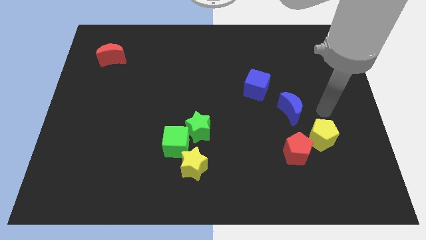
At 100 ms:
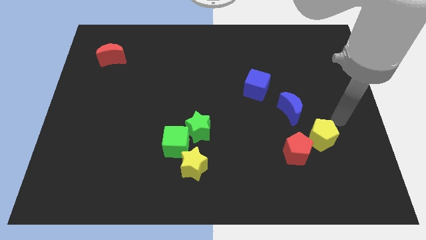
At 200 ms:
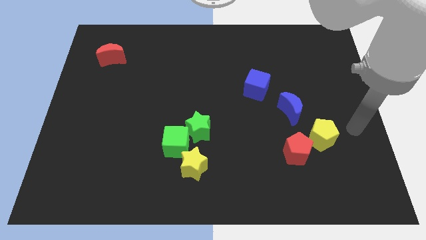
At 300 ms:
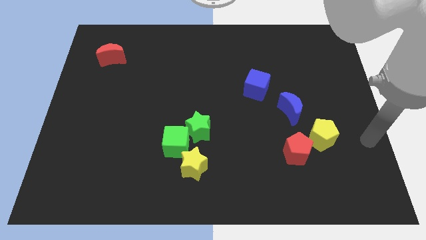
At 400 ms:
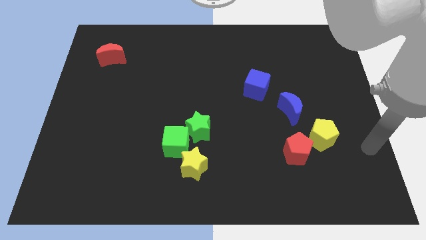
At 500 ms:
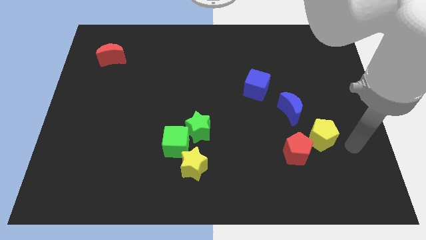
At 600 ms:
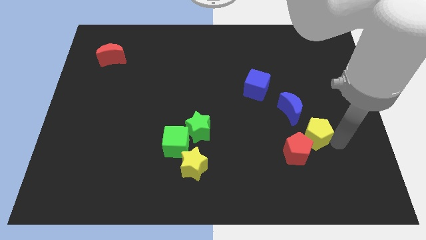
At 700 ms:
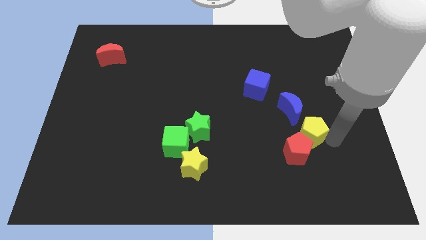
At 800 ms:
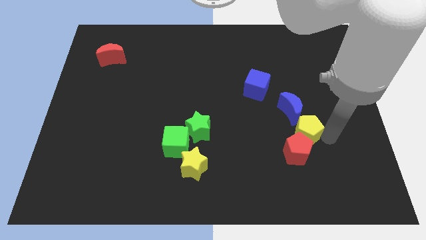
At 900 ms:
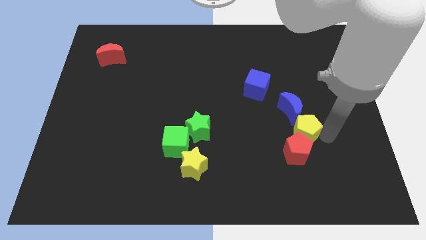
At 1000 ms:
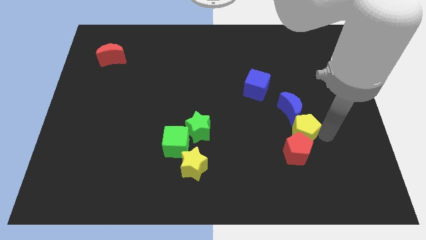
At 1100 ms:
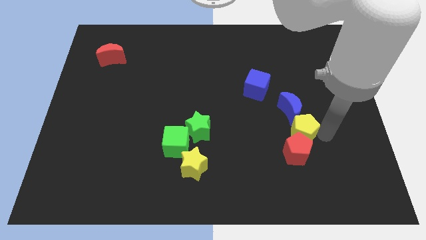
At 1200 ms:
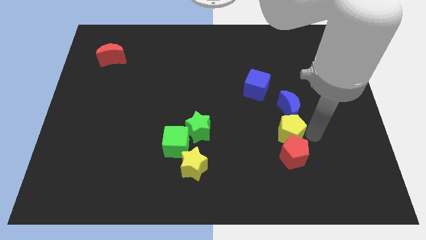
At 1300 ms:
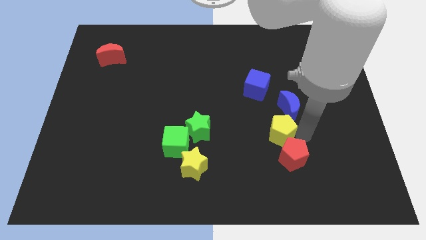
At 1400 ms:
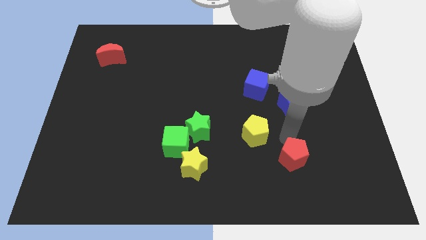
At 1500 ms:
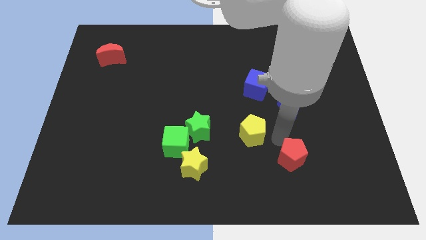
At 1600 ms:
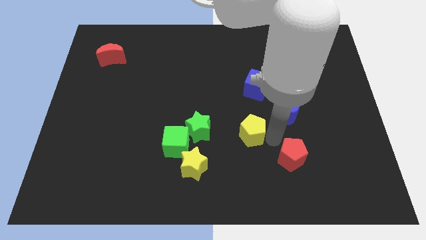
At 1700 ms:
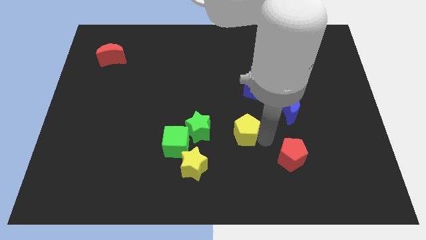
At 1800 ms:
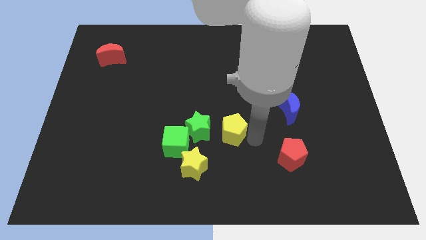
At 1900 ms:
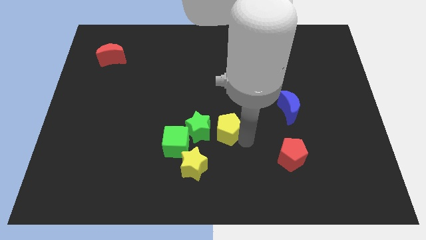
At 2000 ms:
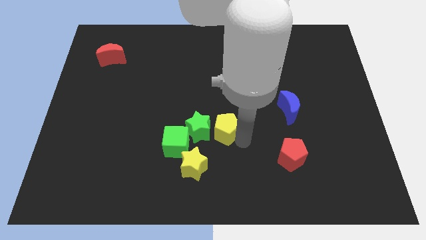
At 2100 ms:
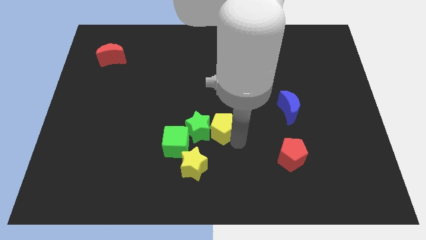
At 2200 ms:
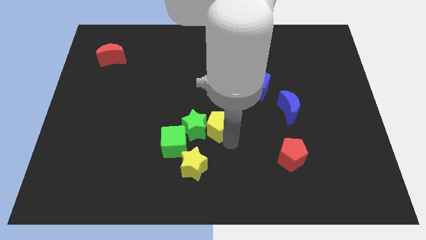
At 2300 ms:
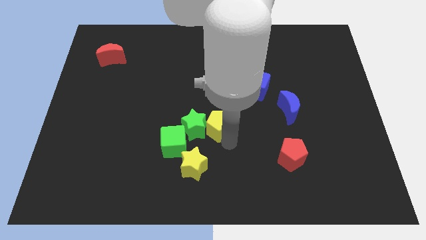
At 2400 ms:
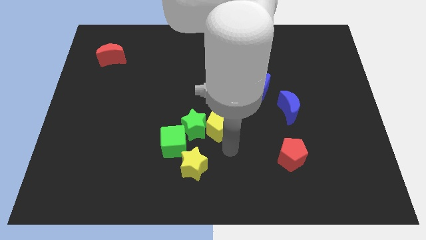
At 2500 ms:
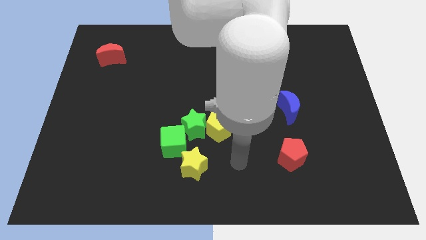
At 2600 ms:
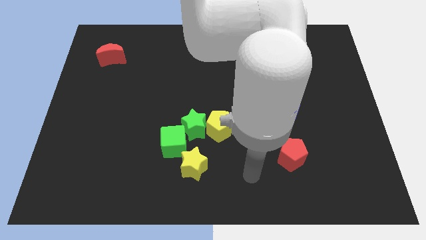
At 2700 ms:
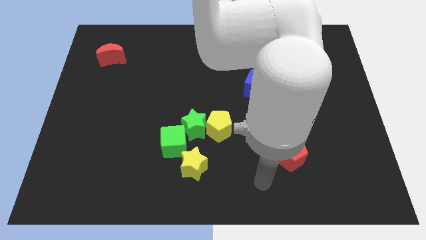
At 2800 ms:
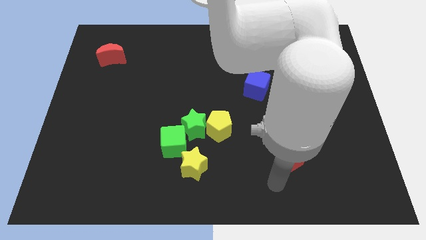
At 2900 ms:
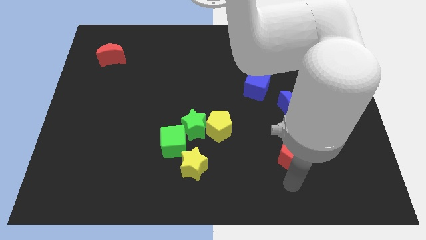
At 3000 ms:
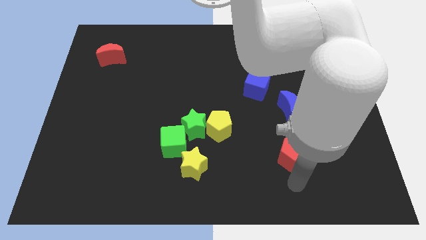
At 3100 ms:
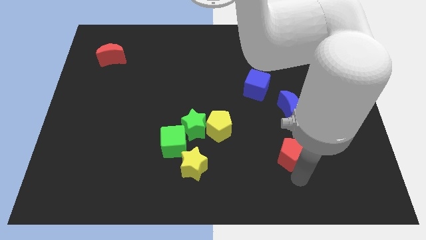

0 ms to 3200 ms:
push the yellow pentagon to the right side of the green star

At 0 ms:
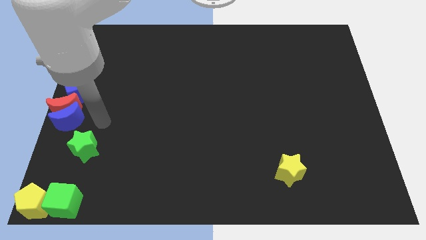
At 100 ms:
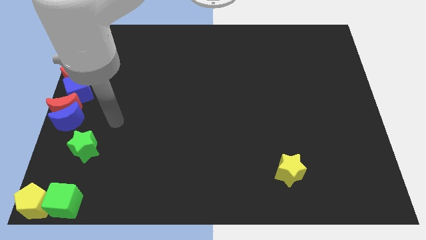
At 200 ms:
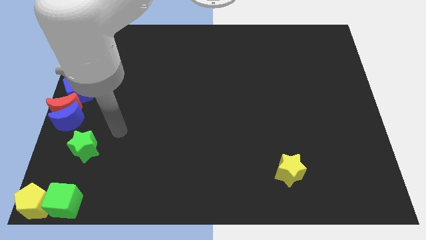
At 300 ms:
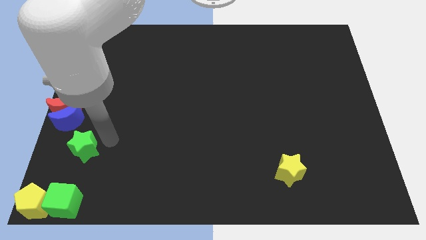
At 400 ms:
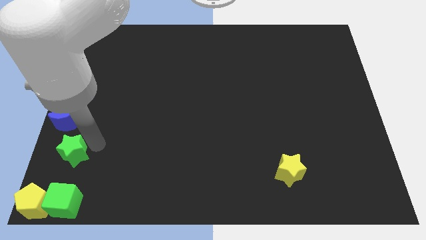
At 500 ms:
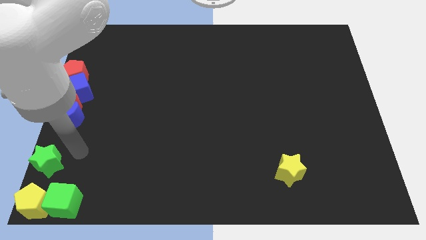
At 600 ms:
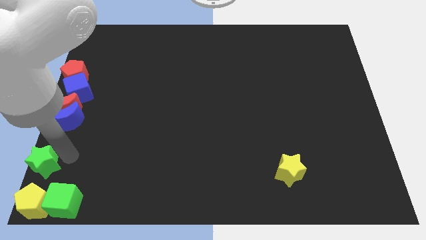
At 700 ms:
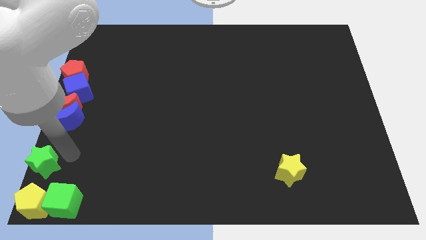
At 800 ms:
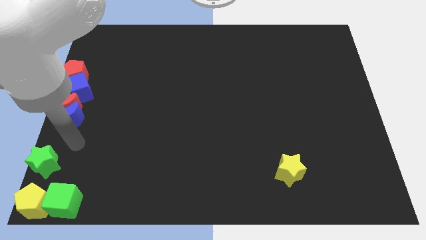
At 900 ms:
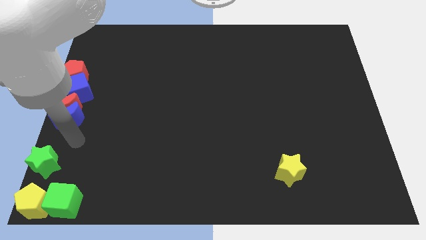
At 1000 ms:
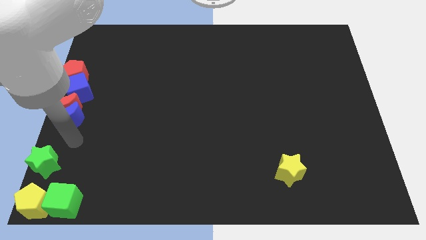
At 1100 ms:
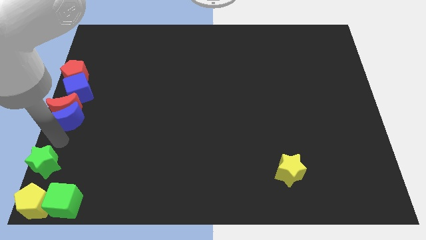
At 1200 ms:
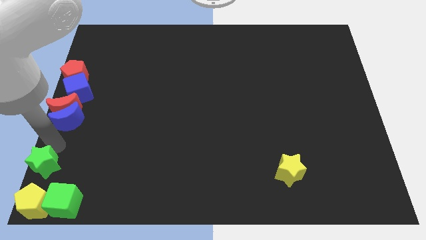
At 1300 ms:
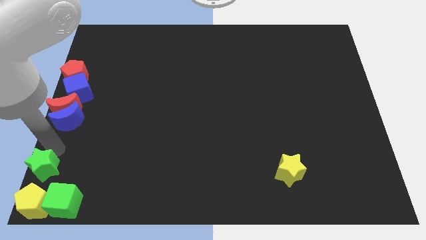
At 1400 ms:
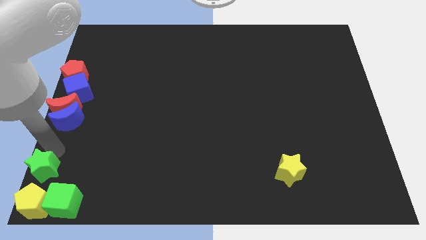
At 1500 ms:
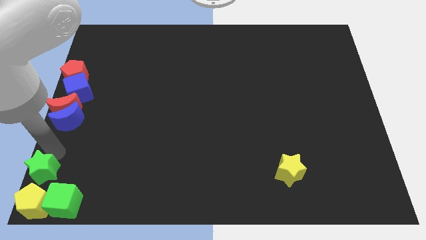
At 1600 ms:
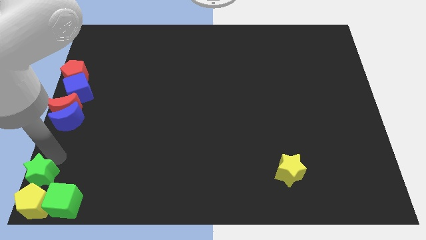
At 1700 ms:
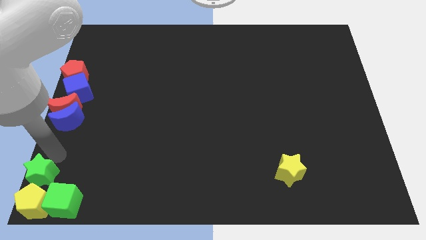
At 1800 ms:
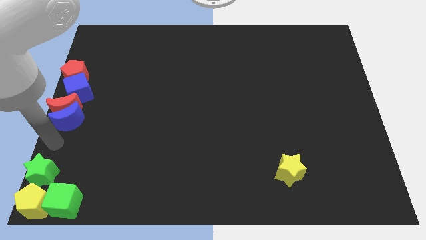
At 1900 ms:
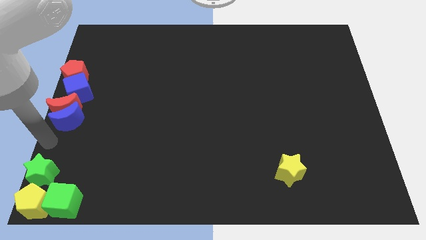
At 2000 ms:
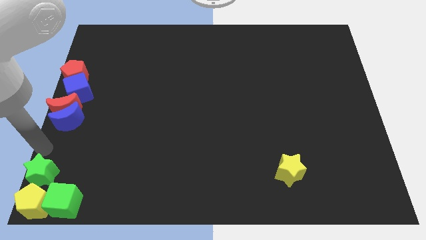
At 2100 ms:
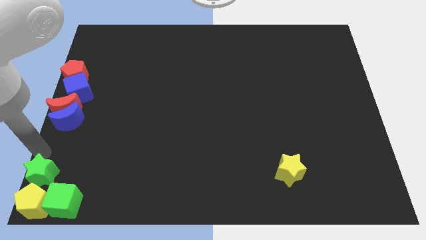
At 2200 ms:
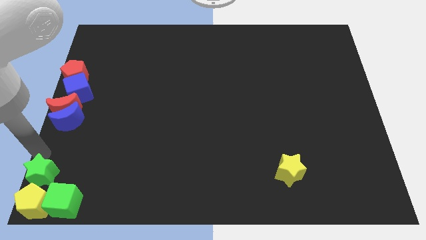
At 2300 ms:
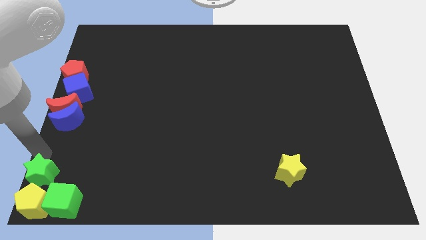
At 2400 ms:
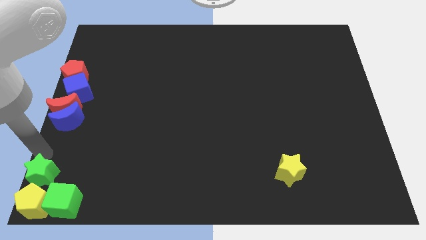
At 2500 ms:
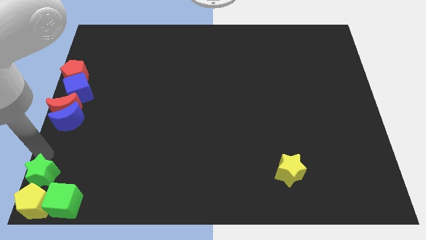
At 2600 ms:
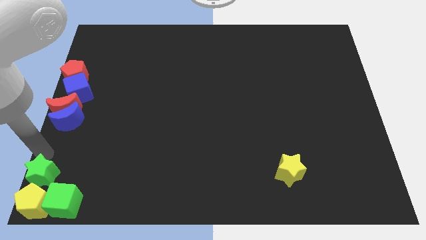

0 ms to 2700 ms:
move the green star on the top of the yellow pentagon

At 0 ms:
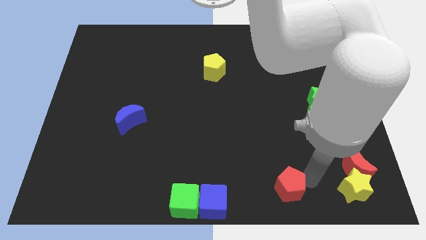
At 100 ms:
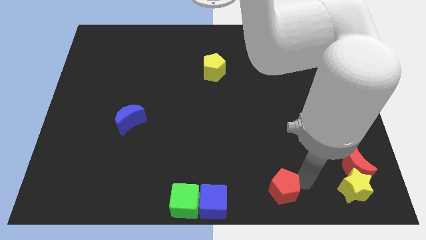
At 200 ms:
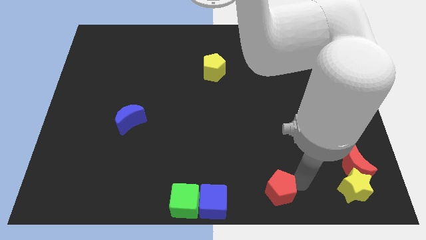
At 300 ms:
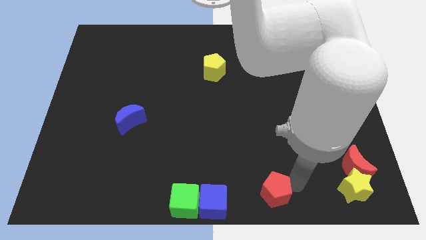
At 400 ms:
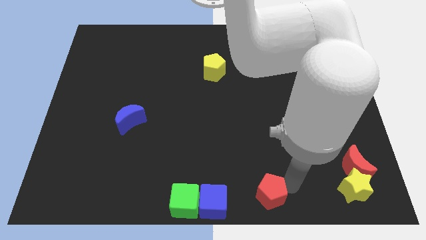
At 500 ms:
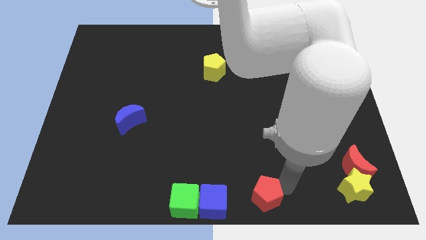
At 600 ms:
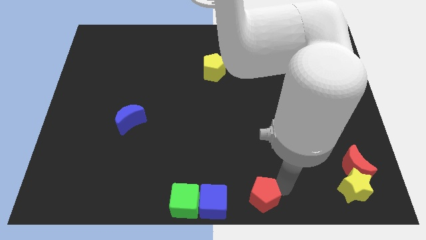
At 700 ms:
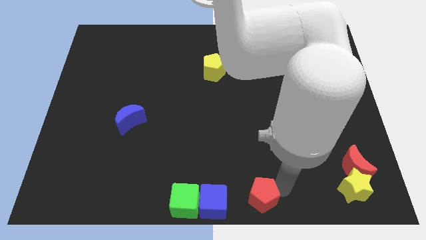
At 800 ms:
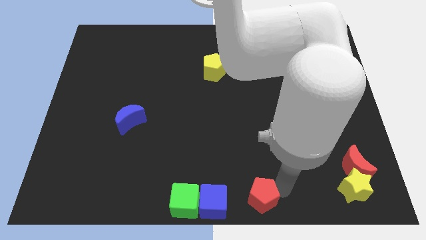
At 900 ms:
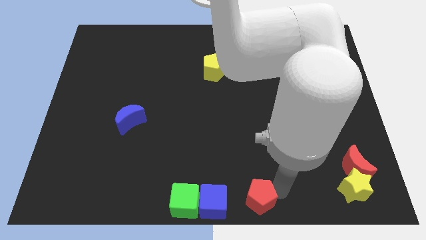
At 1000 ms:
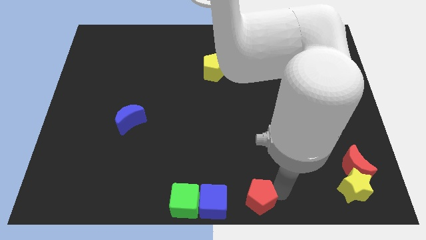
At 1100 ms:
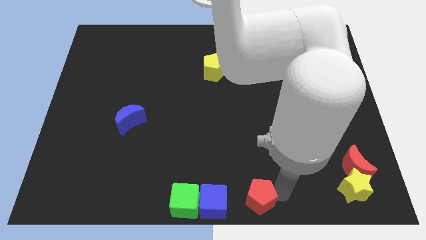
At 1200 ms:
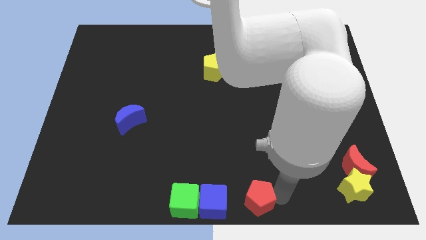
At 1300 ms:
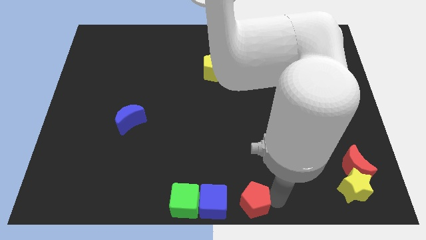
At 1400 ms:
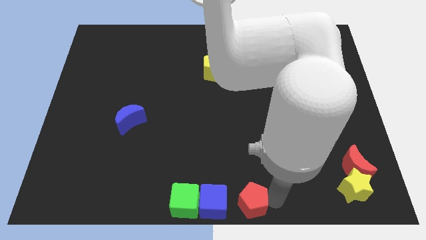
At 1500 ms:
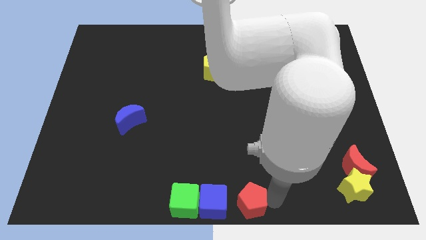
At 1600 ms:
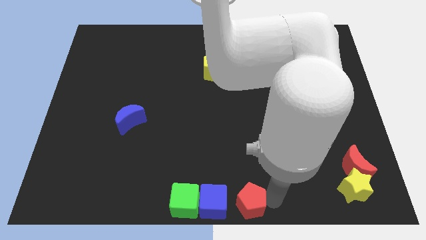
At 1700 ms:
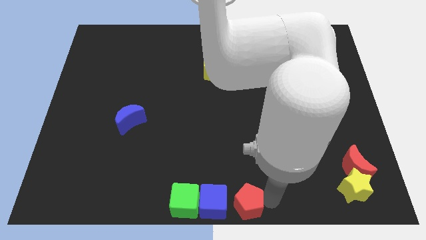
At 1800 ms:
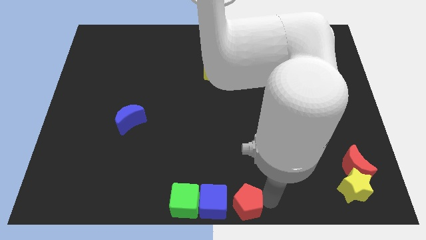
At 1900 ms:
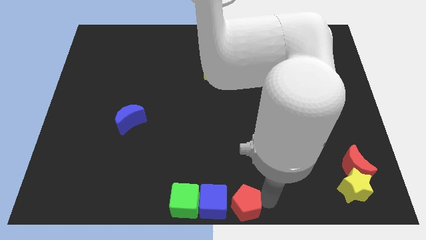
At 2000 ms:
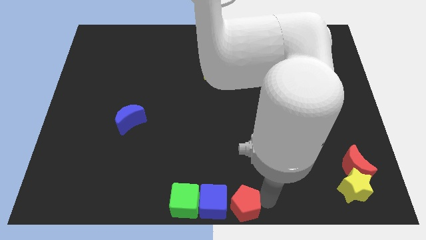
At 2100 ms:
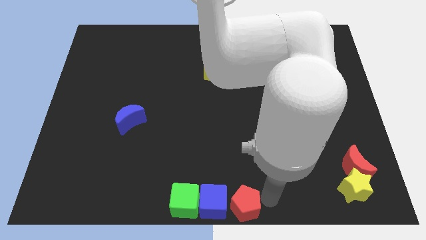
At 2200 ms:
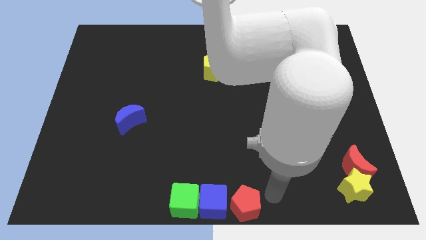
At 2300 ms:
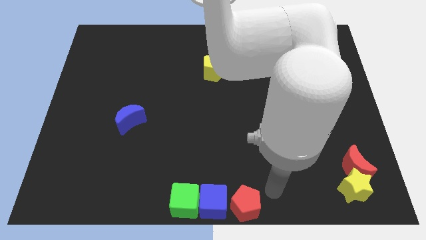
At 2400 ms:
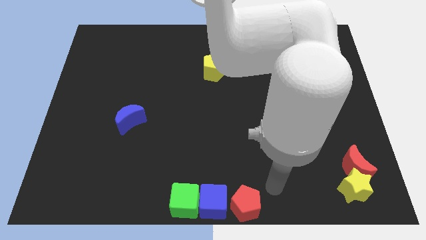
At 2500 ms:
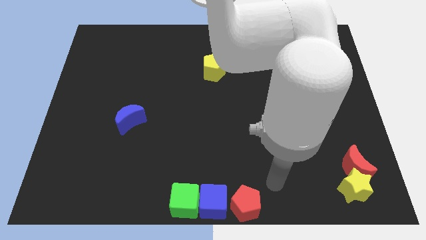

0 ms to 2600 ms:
move the red pentagon to the right side of the blue cube

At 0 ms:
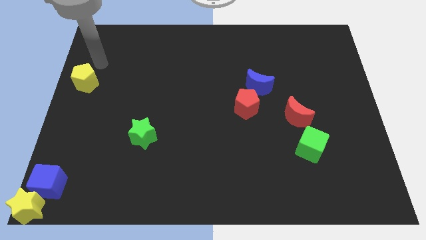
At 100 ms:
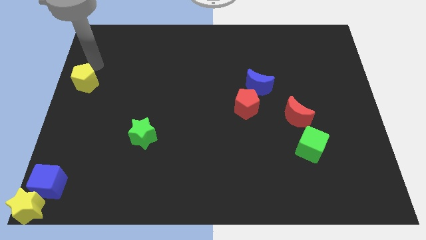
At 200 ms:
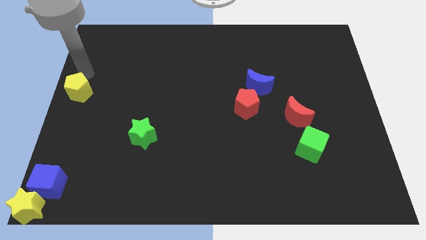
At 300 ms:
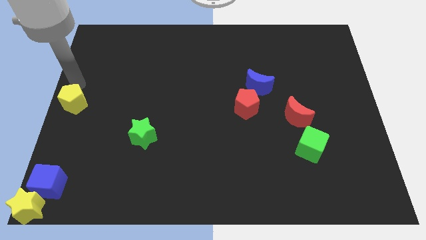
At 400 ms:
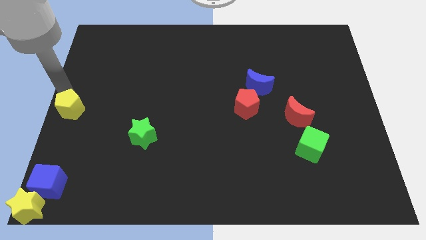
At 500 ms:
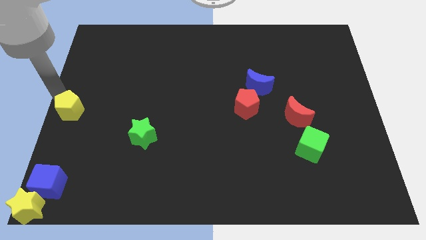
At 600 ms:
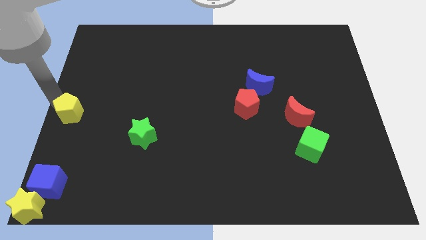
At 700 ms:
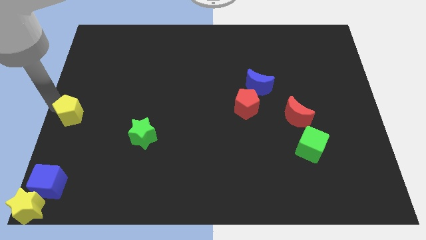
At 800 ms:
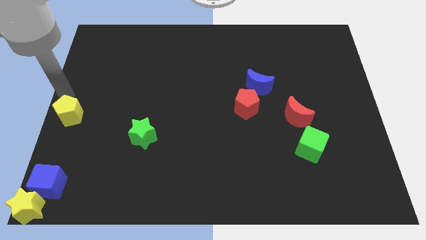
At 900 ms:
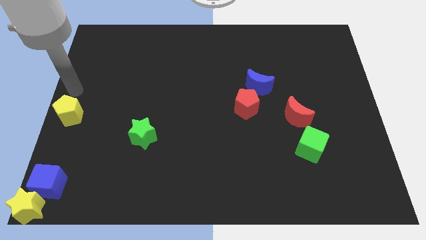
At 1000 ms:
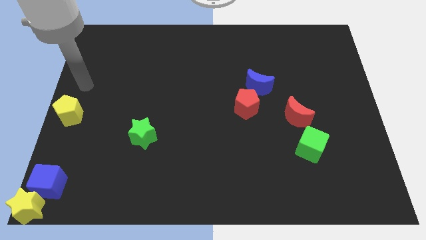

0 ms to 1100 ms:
move the yellow pentagon towards the blue cube
